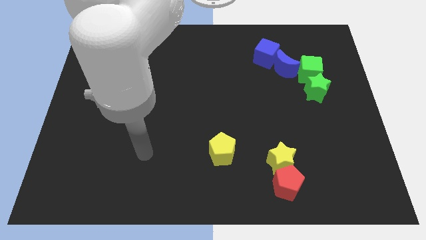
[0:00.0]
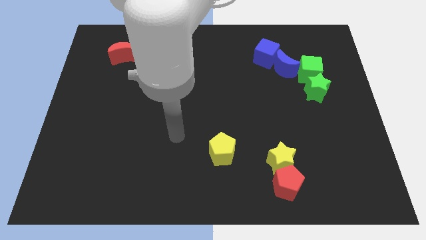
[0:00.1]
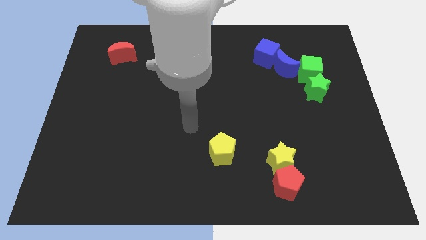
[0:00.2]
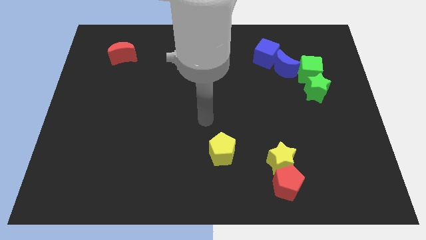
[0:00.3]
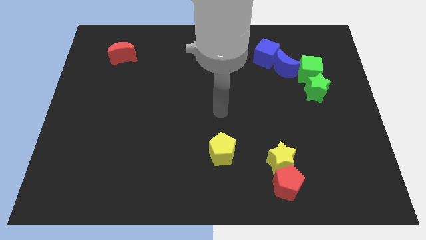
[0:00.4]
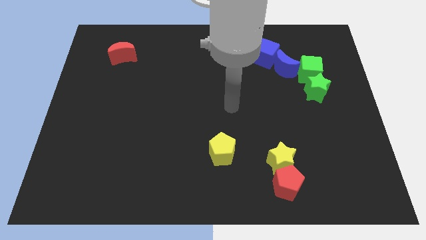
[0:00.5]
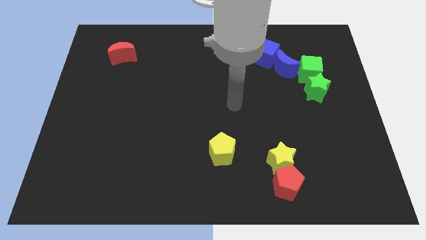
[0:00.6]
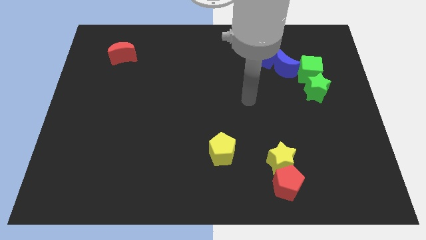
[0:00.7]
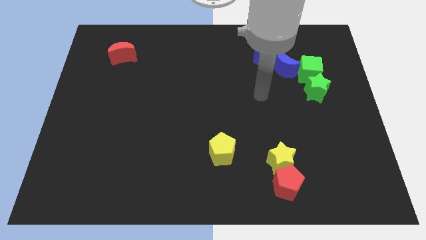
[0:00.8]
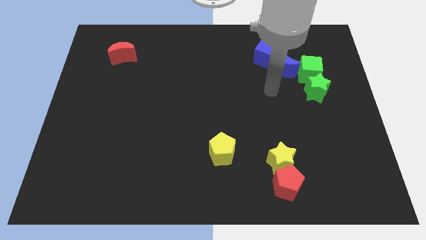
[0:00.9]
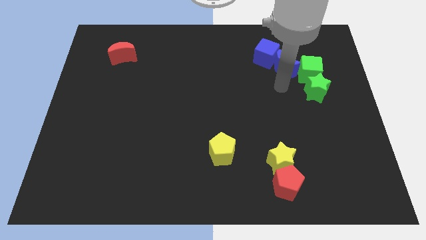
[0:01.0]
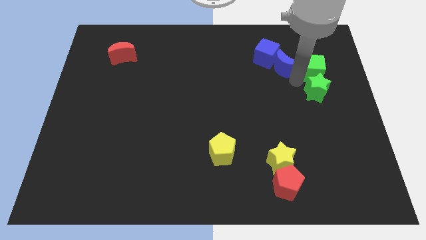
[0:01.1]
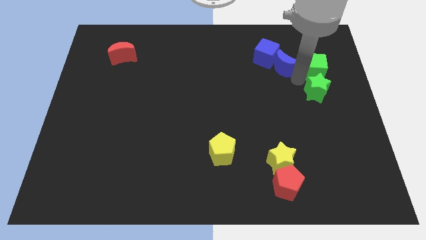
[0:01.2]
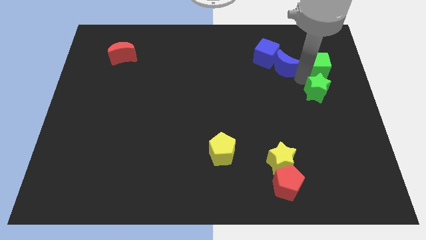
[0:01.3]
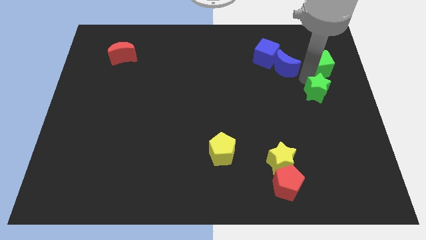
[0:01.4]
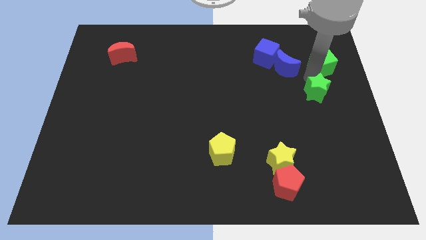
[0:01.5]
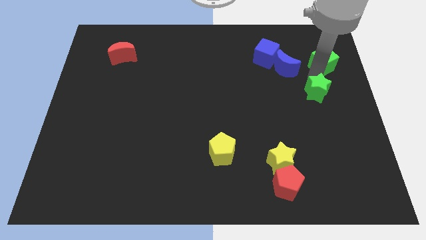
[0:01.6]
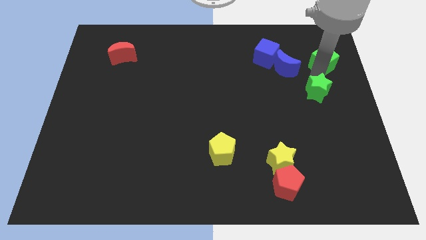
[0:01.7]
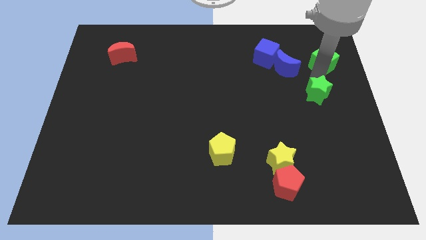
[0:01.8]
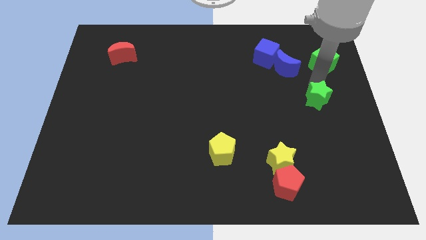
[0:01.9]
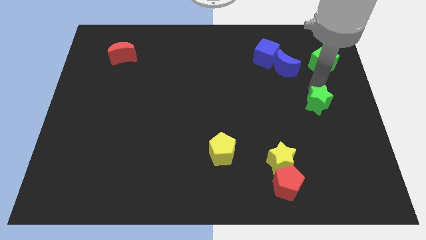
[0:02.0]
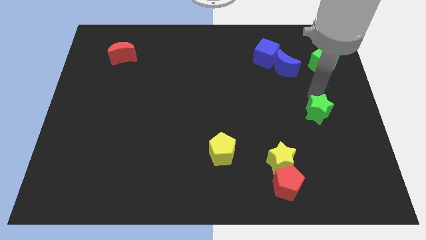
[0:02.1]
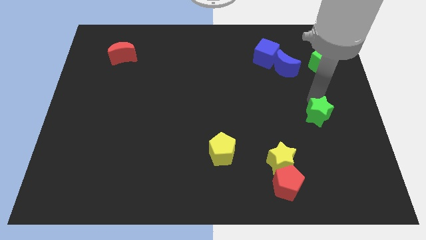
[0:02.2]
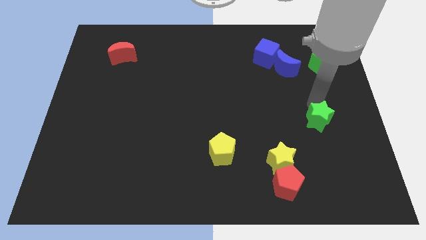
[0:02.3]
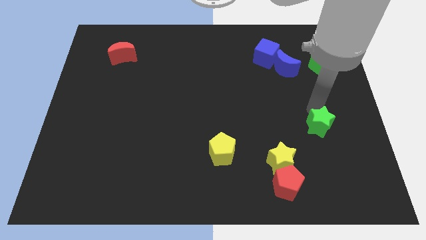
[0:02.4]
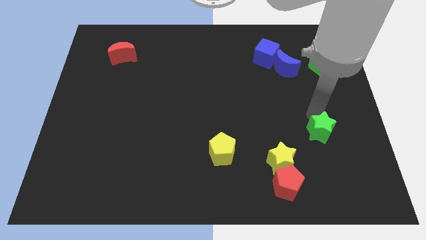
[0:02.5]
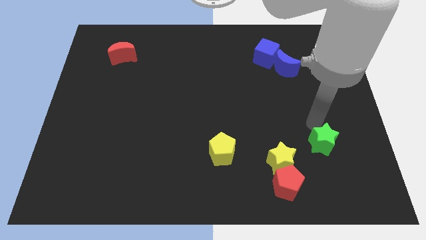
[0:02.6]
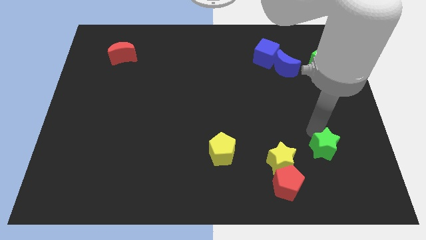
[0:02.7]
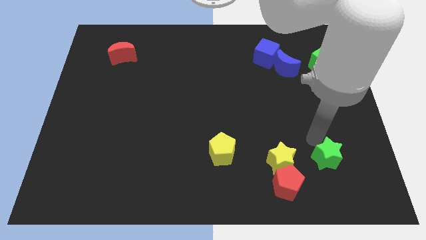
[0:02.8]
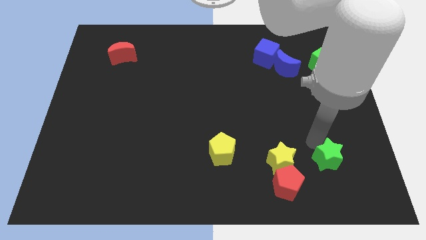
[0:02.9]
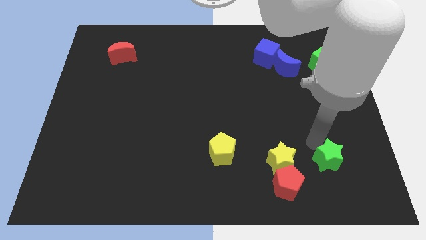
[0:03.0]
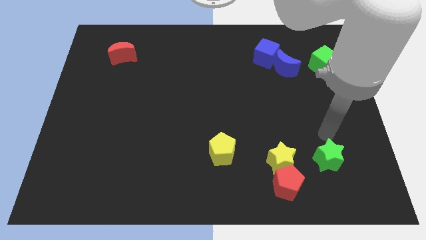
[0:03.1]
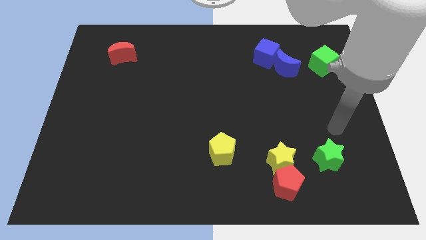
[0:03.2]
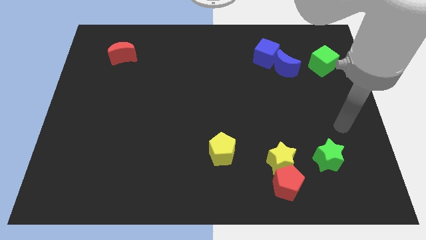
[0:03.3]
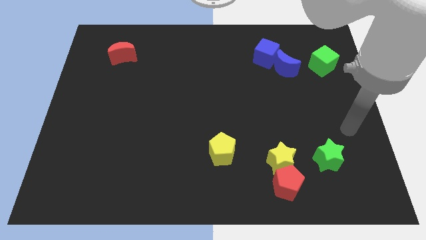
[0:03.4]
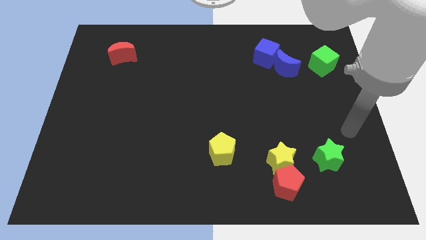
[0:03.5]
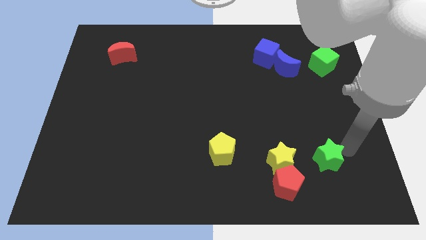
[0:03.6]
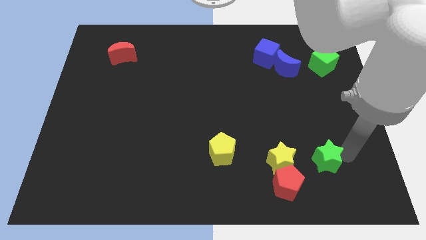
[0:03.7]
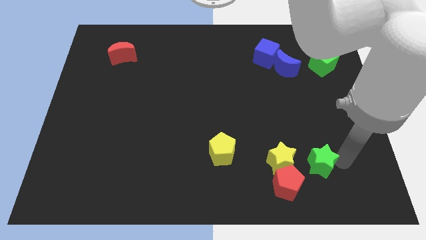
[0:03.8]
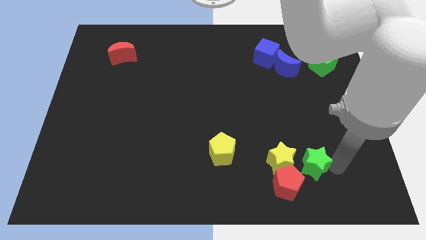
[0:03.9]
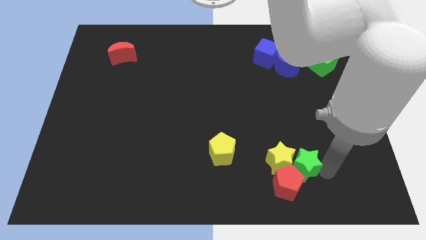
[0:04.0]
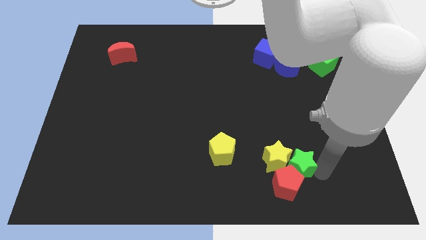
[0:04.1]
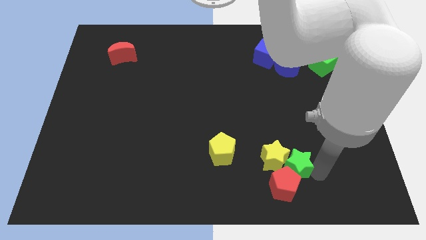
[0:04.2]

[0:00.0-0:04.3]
push the green star to the red pentagon

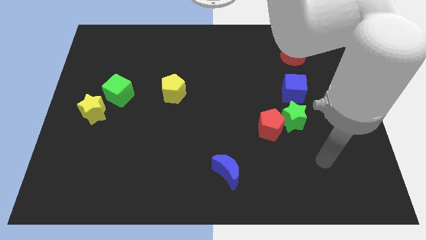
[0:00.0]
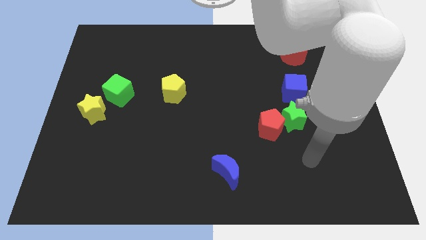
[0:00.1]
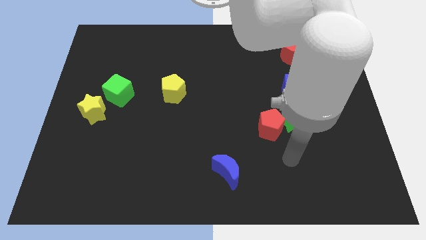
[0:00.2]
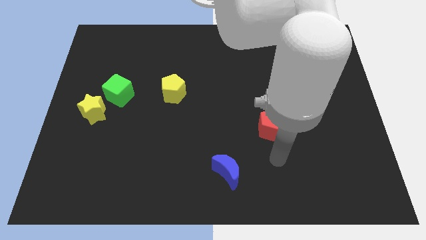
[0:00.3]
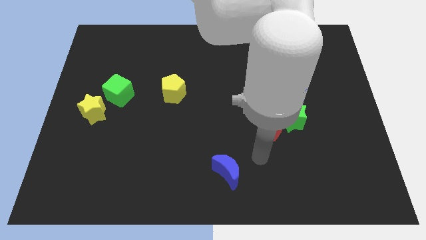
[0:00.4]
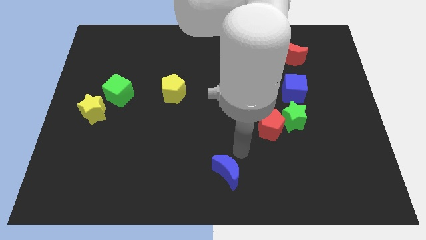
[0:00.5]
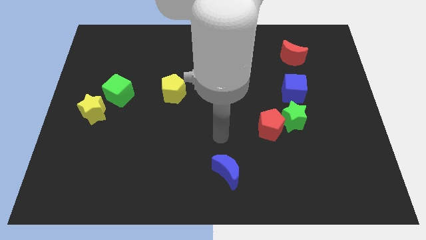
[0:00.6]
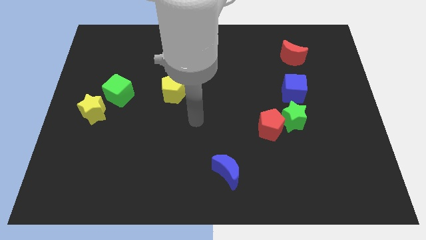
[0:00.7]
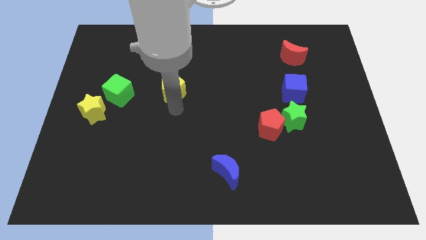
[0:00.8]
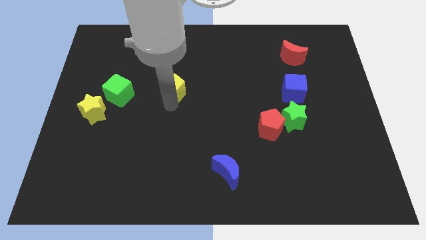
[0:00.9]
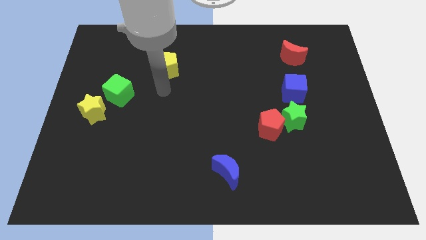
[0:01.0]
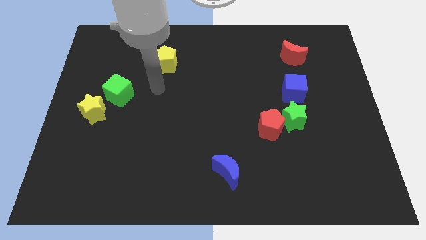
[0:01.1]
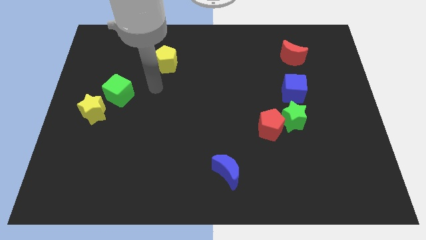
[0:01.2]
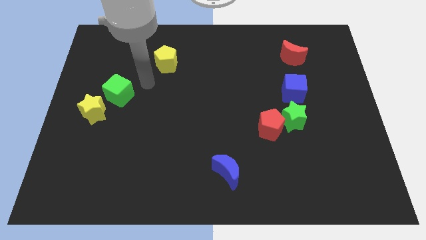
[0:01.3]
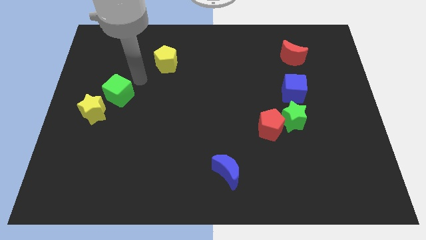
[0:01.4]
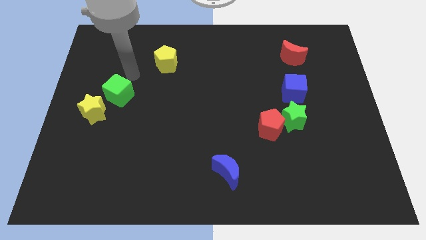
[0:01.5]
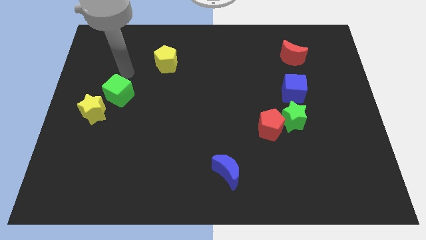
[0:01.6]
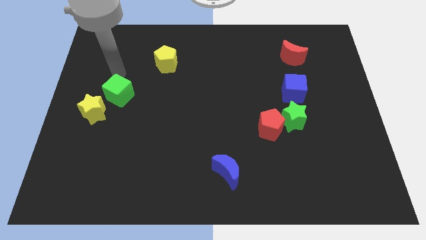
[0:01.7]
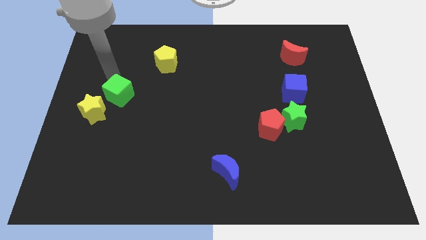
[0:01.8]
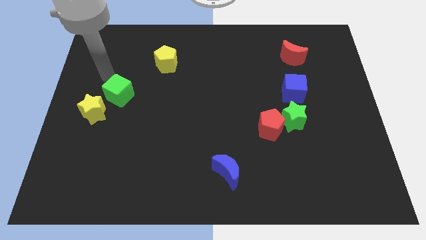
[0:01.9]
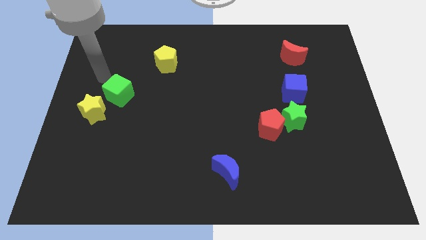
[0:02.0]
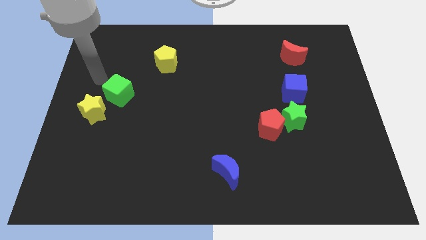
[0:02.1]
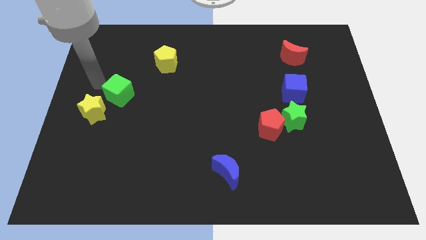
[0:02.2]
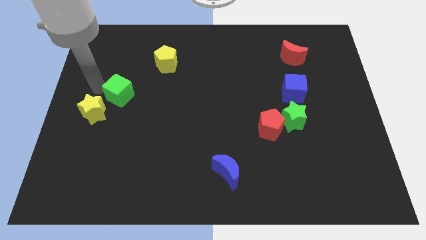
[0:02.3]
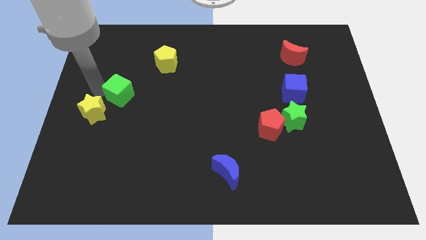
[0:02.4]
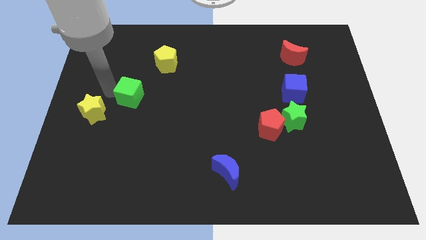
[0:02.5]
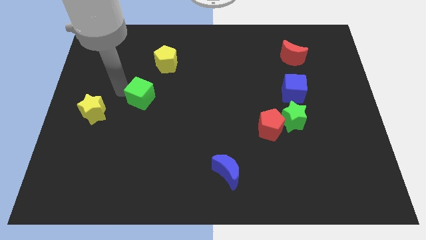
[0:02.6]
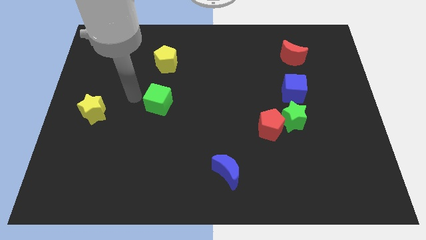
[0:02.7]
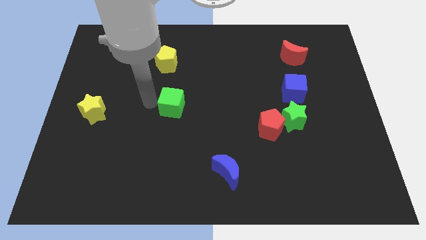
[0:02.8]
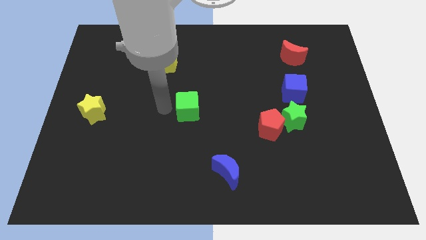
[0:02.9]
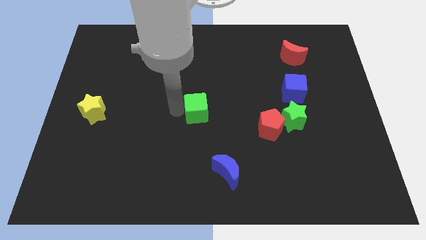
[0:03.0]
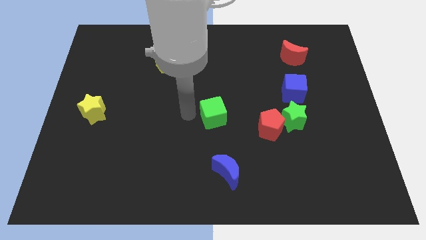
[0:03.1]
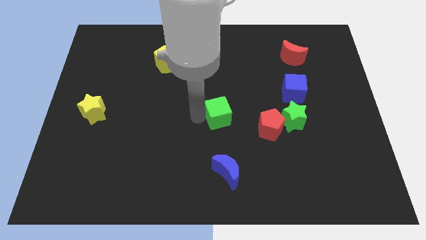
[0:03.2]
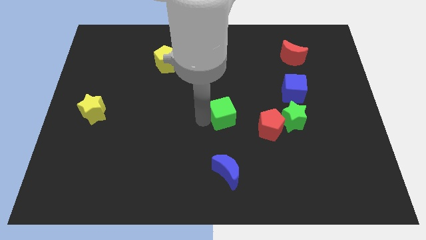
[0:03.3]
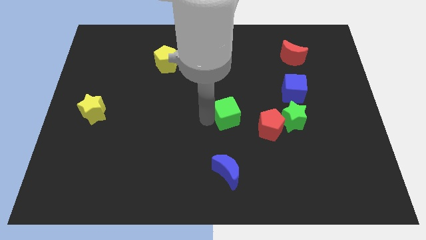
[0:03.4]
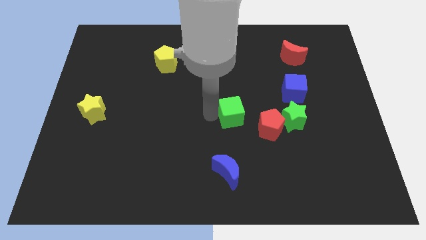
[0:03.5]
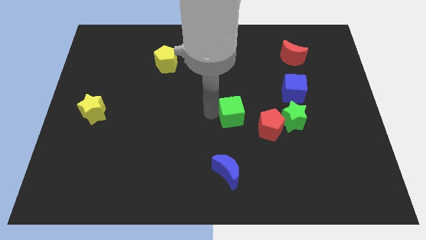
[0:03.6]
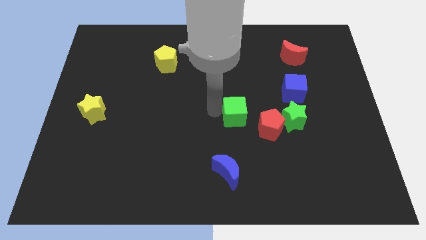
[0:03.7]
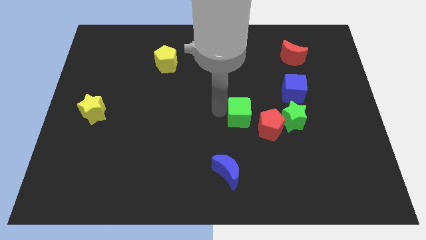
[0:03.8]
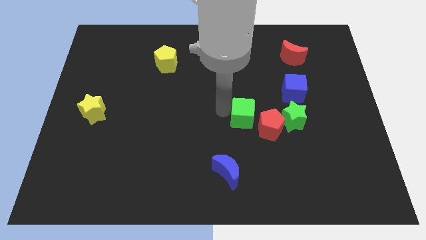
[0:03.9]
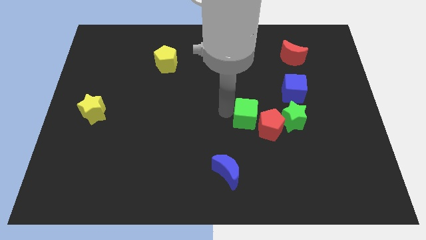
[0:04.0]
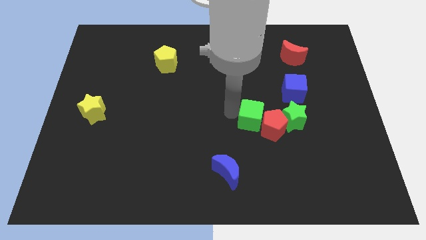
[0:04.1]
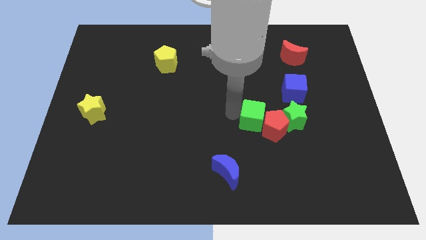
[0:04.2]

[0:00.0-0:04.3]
push the green cube close to the red pentagon
